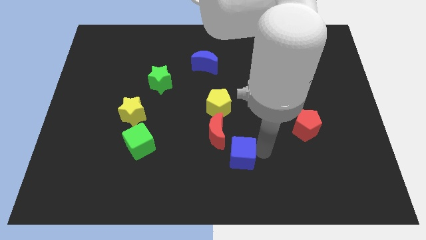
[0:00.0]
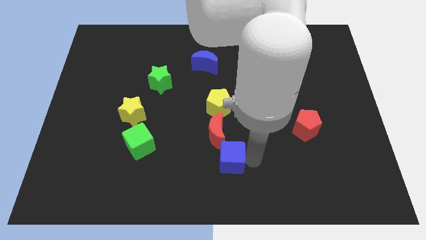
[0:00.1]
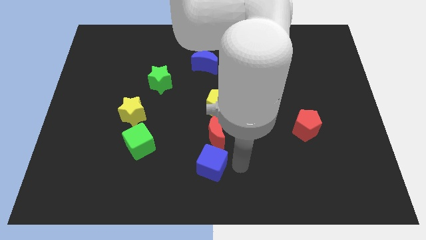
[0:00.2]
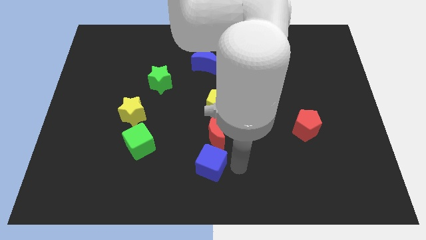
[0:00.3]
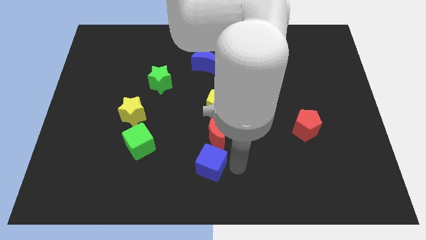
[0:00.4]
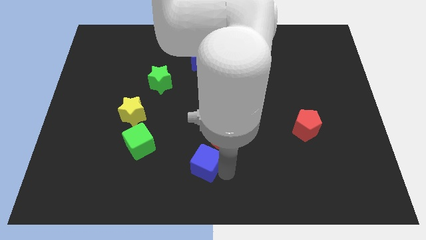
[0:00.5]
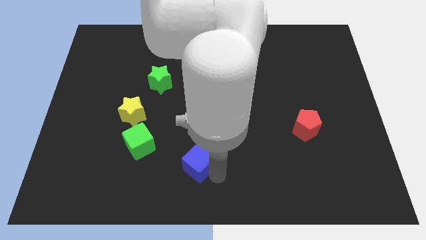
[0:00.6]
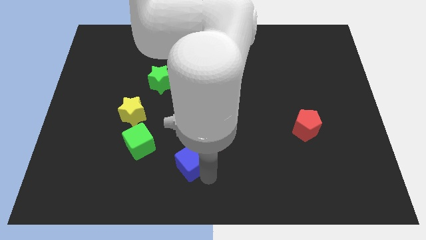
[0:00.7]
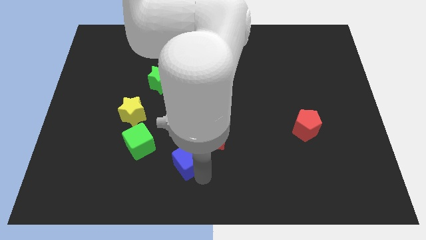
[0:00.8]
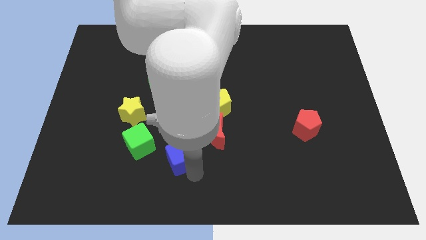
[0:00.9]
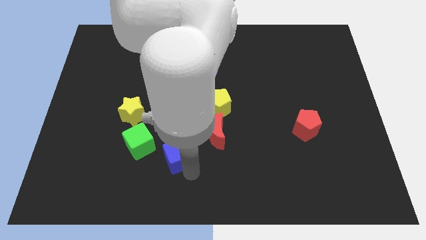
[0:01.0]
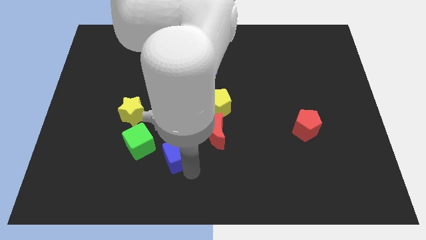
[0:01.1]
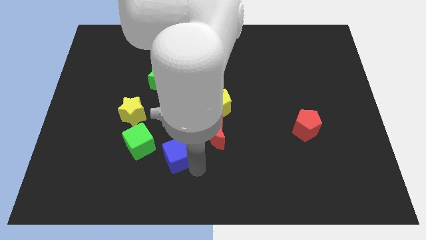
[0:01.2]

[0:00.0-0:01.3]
push the blue cube towards the green cube

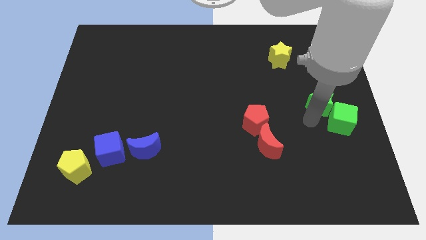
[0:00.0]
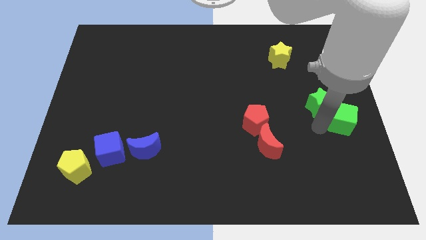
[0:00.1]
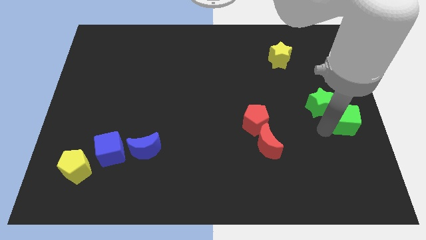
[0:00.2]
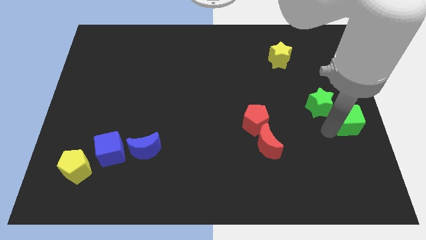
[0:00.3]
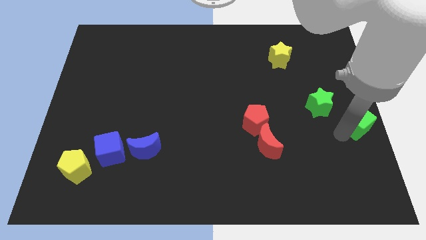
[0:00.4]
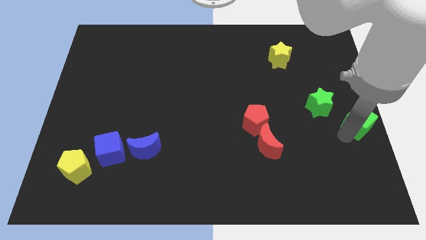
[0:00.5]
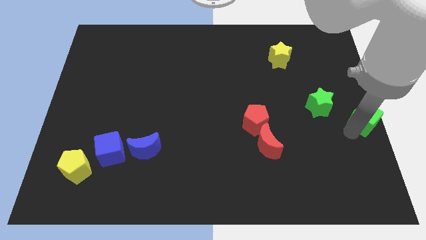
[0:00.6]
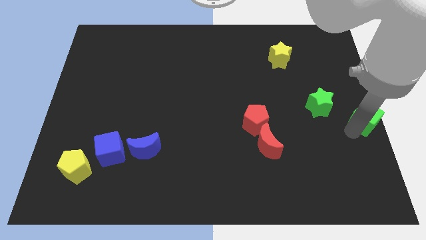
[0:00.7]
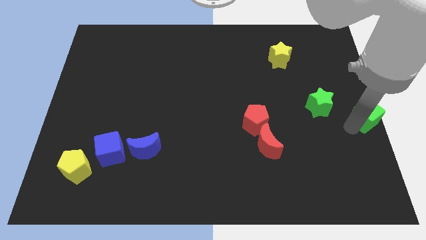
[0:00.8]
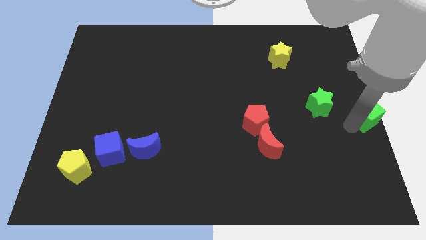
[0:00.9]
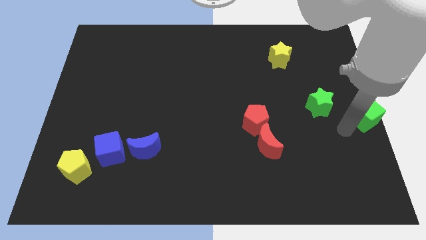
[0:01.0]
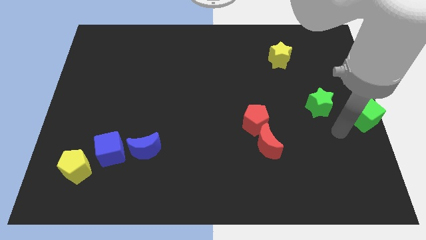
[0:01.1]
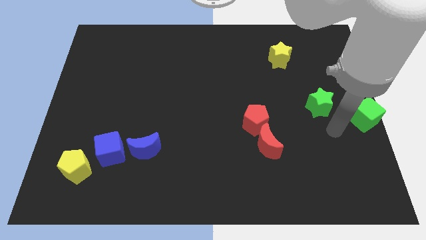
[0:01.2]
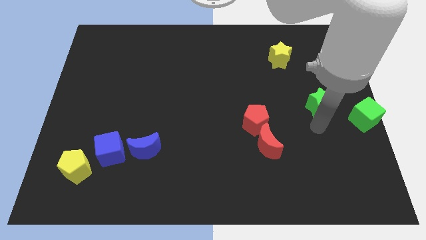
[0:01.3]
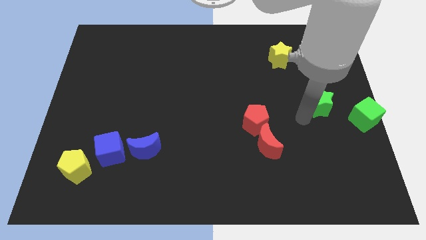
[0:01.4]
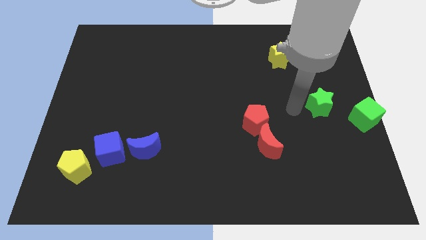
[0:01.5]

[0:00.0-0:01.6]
move the green cube to the center right of the board

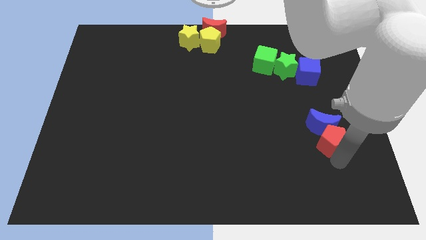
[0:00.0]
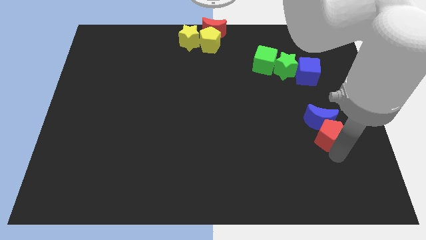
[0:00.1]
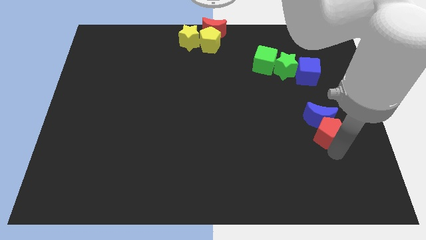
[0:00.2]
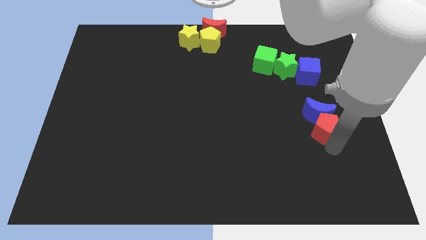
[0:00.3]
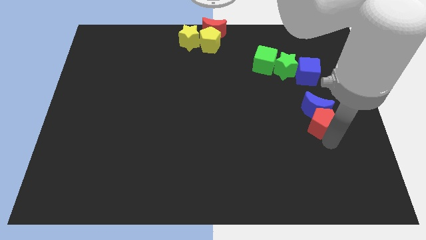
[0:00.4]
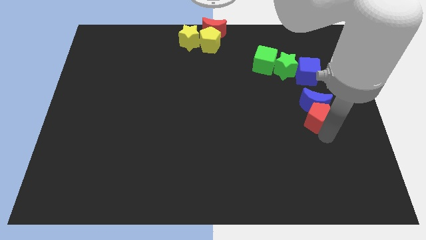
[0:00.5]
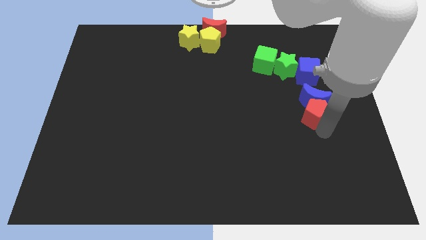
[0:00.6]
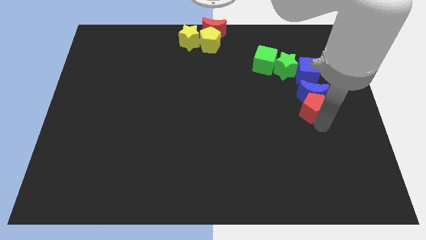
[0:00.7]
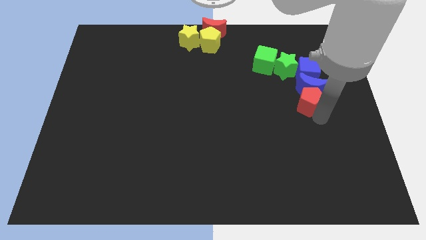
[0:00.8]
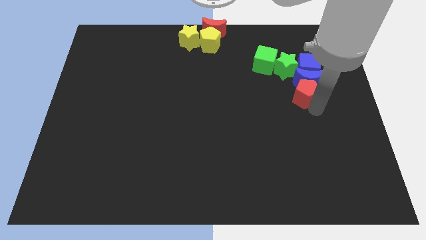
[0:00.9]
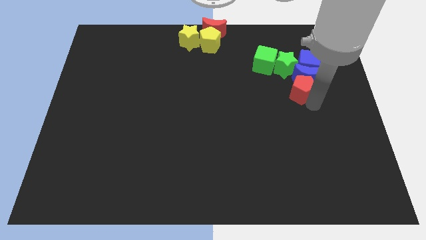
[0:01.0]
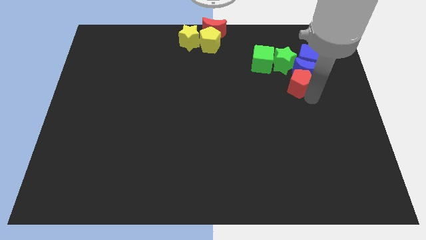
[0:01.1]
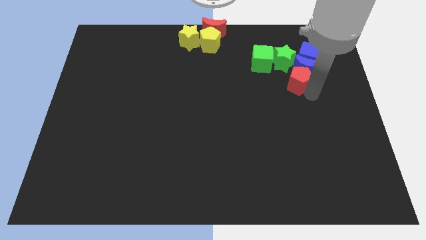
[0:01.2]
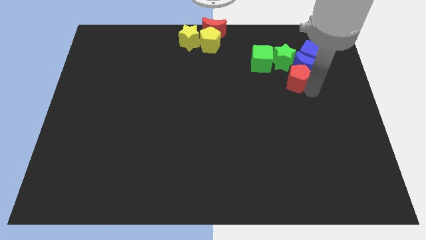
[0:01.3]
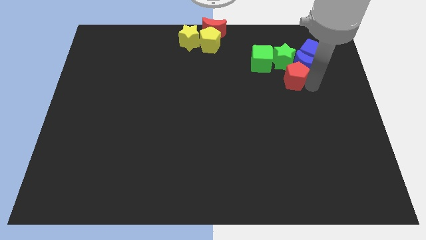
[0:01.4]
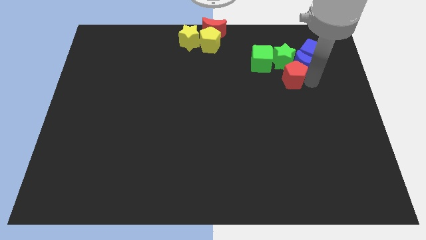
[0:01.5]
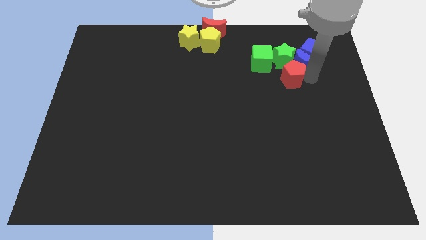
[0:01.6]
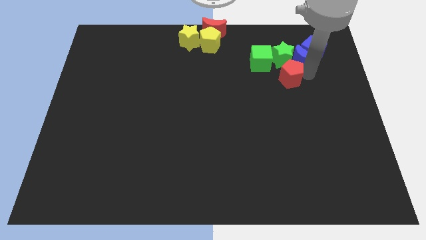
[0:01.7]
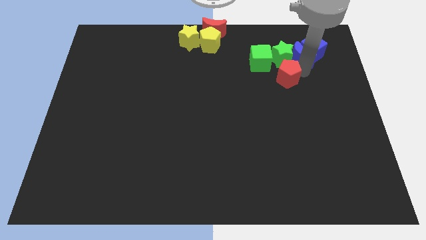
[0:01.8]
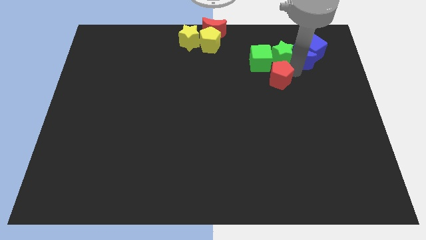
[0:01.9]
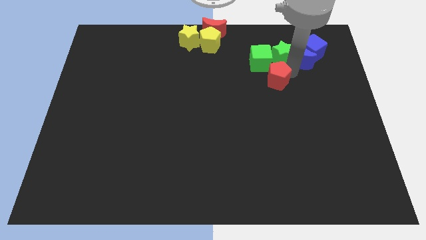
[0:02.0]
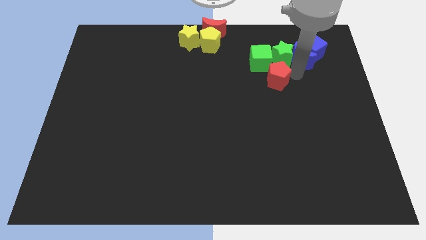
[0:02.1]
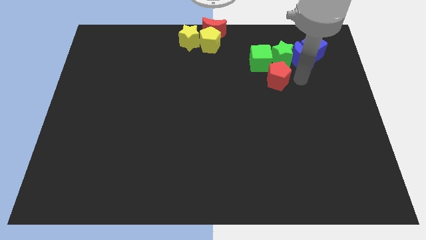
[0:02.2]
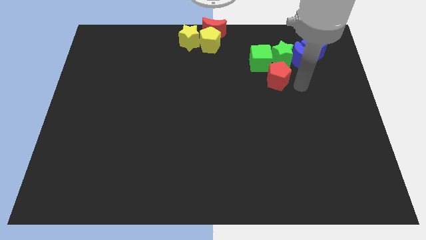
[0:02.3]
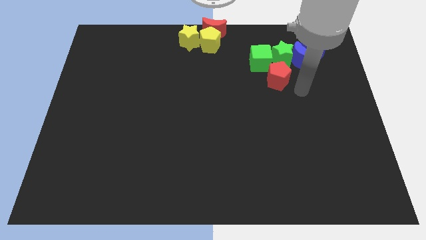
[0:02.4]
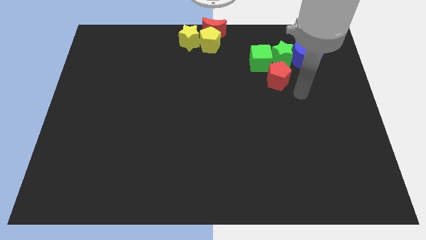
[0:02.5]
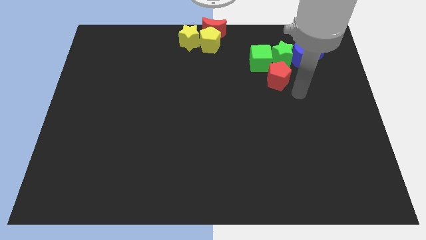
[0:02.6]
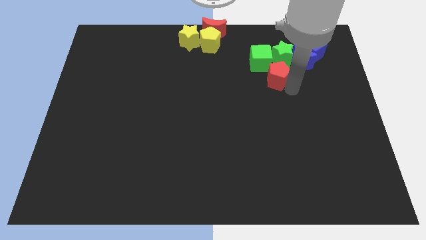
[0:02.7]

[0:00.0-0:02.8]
place the blue crescent in between the green star and blue cube using the red pentagon

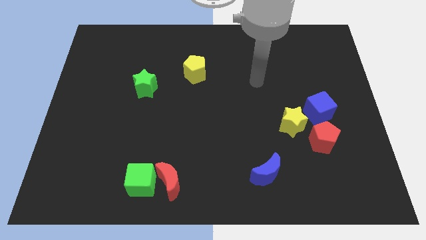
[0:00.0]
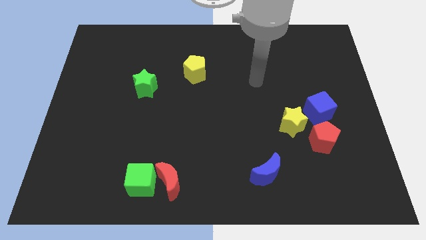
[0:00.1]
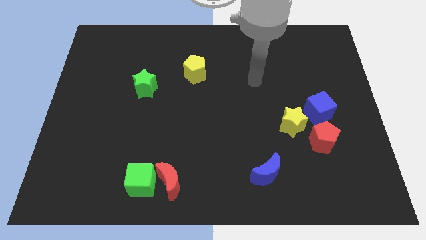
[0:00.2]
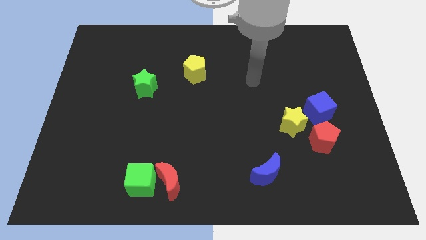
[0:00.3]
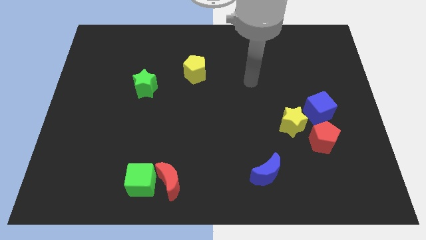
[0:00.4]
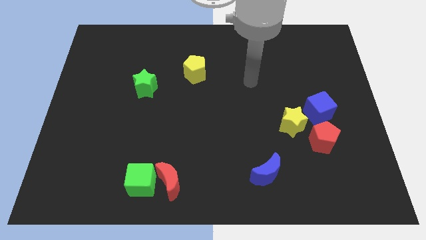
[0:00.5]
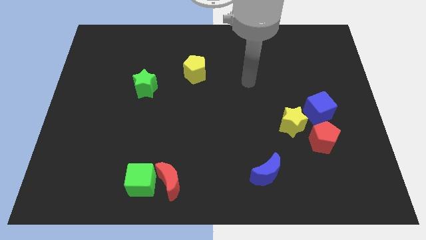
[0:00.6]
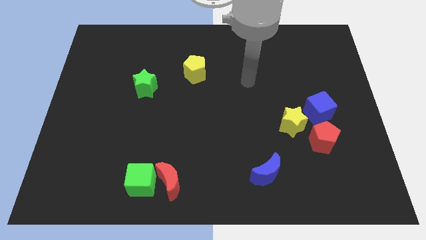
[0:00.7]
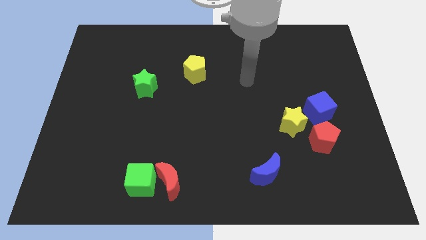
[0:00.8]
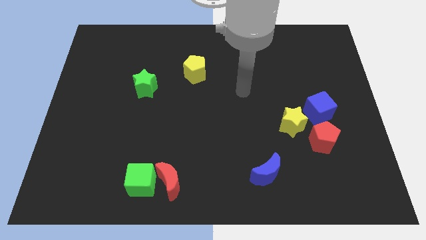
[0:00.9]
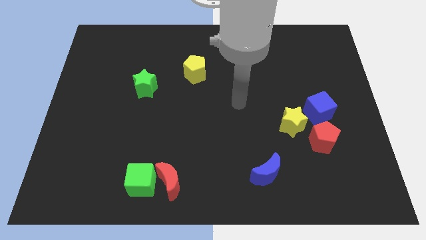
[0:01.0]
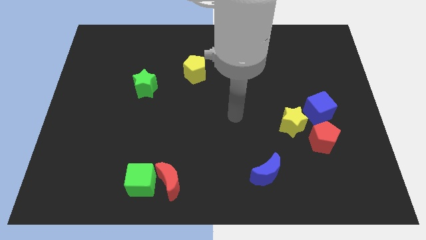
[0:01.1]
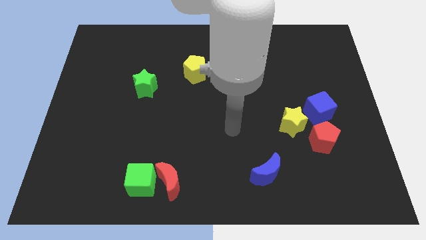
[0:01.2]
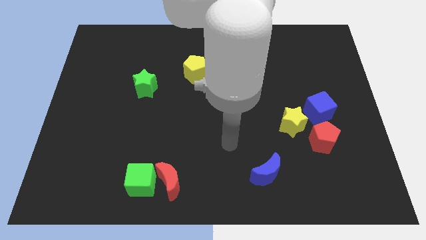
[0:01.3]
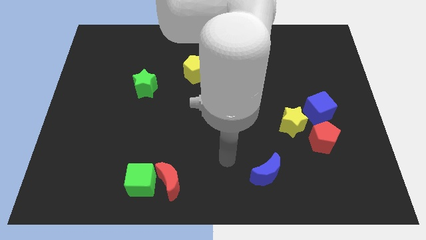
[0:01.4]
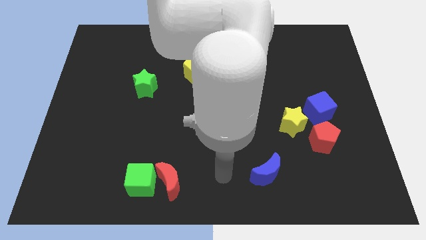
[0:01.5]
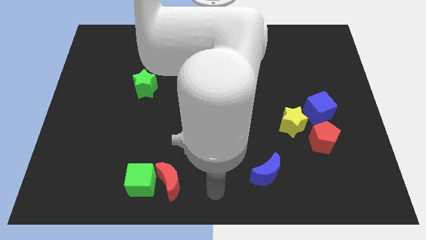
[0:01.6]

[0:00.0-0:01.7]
point your hand in between red crescent and blue crescent

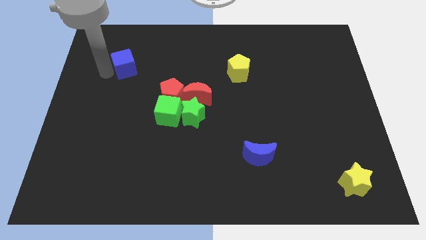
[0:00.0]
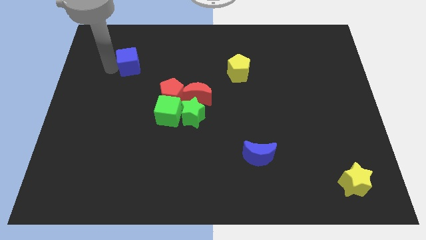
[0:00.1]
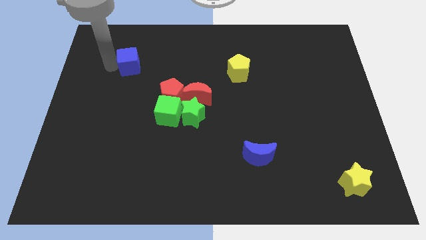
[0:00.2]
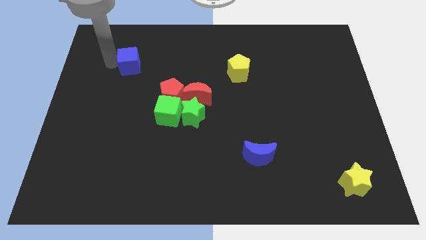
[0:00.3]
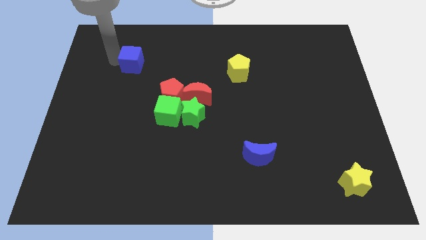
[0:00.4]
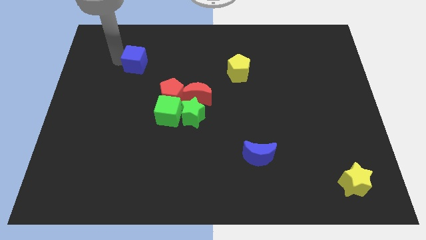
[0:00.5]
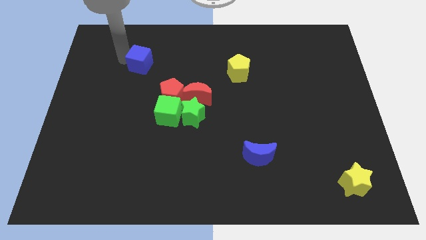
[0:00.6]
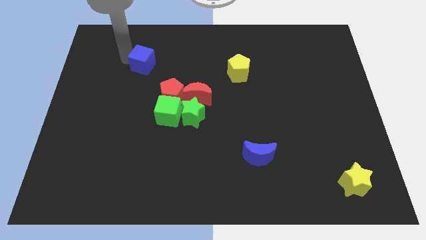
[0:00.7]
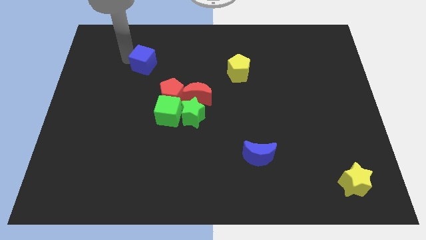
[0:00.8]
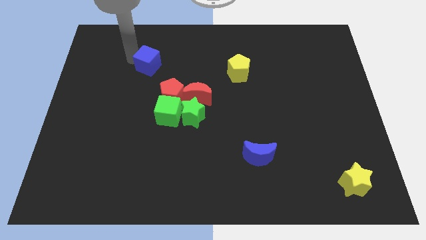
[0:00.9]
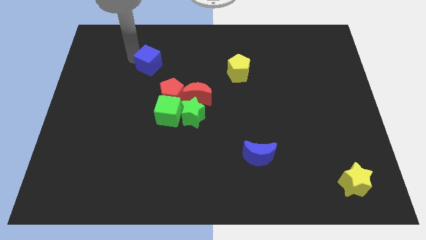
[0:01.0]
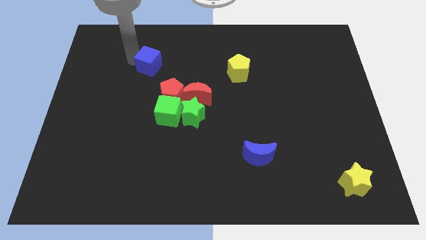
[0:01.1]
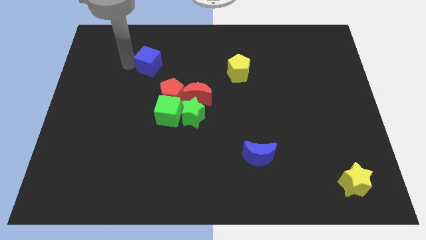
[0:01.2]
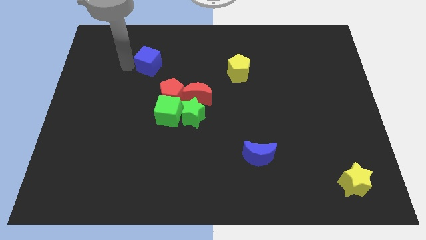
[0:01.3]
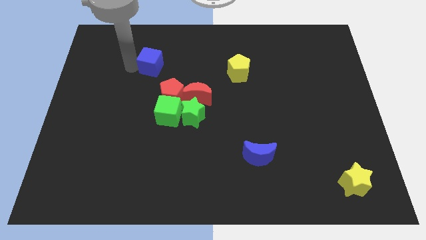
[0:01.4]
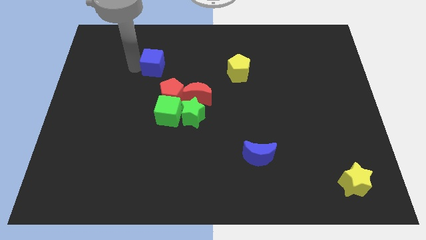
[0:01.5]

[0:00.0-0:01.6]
place the blue cube diagonally towards the red pentagon
